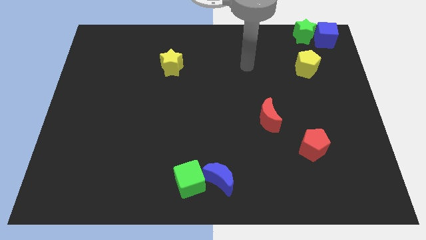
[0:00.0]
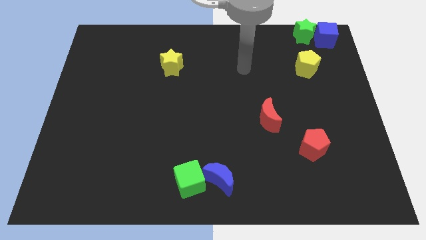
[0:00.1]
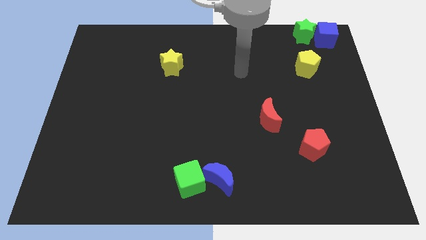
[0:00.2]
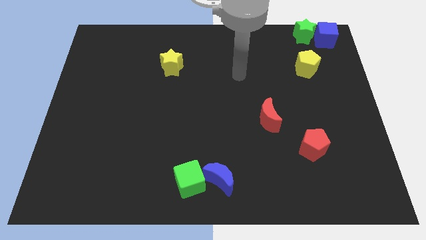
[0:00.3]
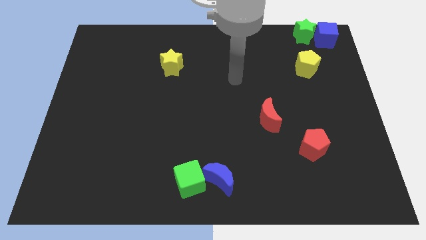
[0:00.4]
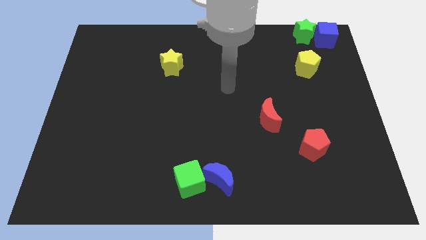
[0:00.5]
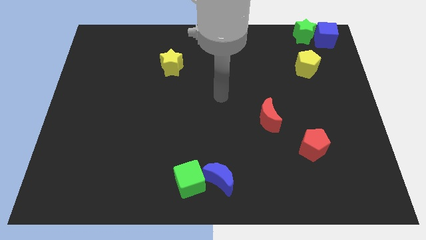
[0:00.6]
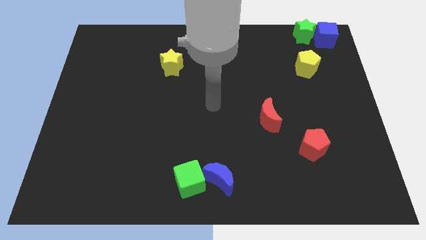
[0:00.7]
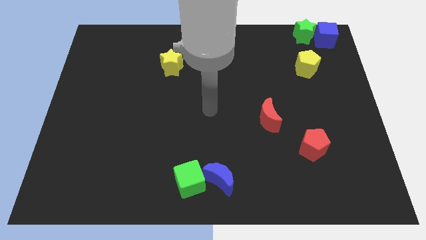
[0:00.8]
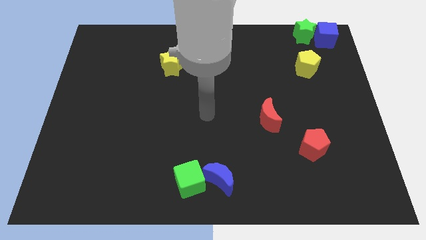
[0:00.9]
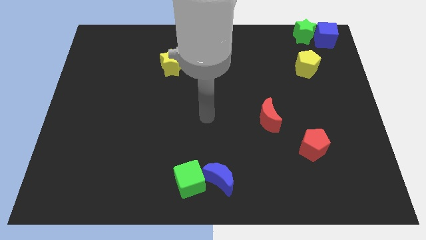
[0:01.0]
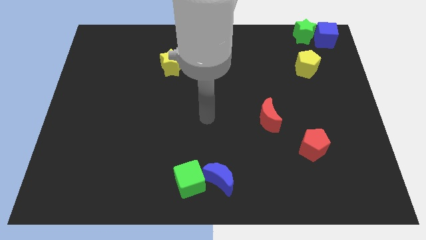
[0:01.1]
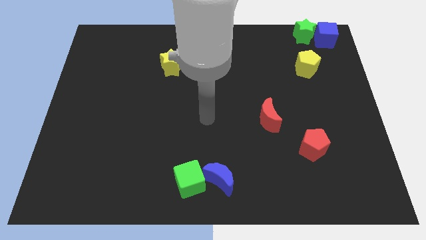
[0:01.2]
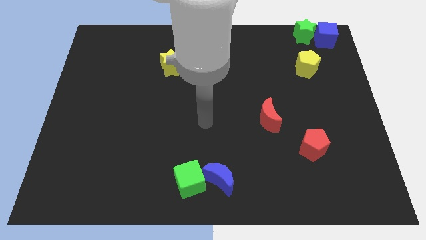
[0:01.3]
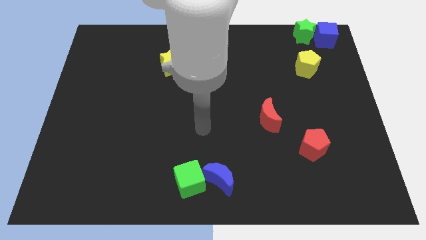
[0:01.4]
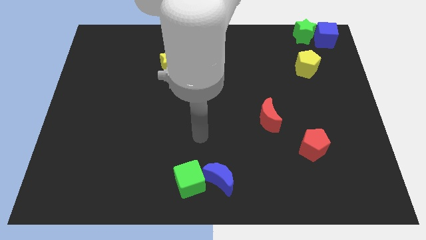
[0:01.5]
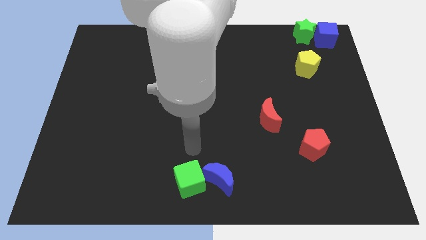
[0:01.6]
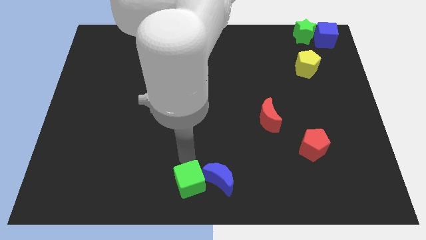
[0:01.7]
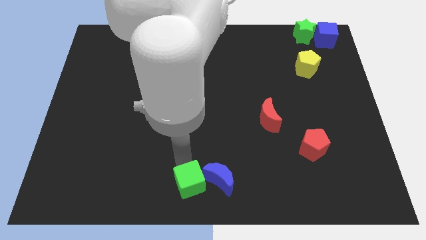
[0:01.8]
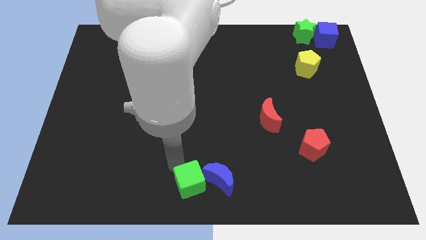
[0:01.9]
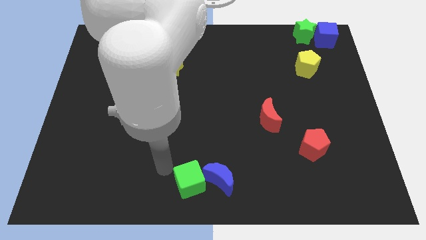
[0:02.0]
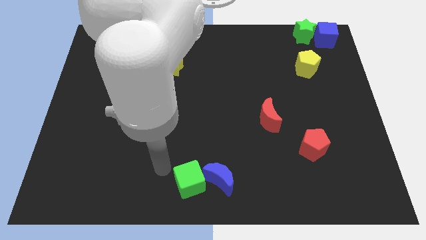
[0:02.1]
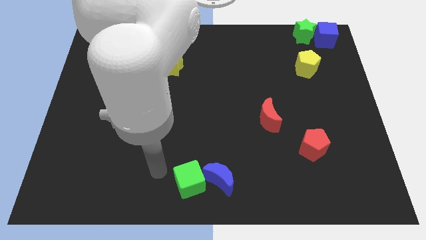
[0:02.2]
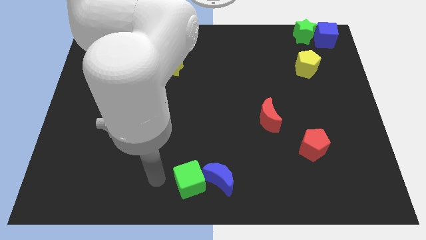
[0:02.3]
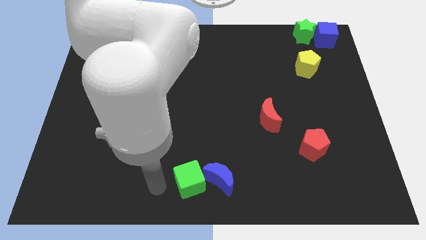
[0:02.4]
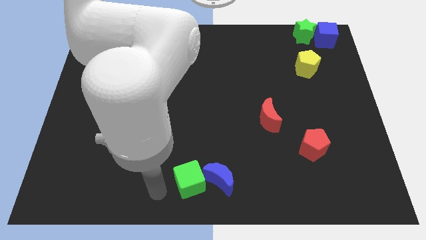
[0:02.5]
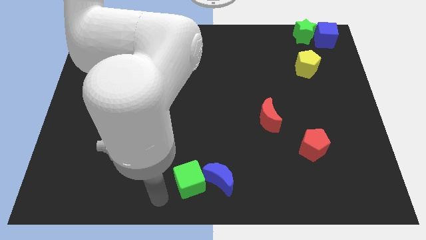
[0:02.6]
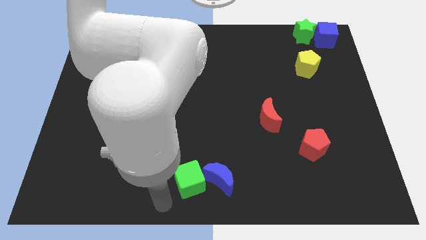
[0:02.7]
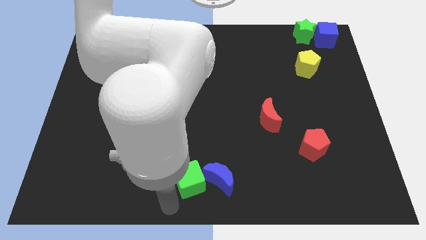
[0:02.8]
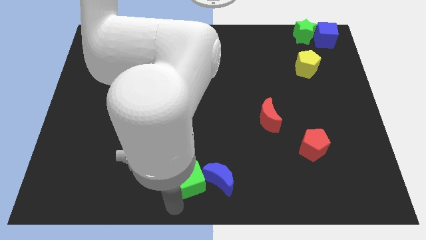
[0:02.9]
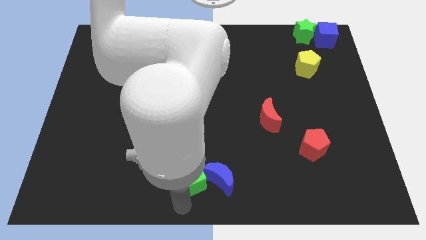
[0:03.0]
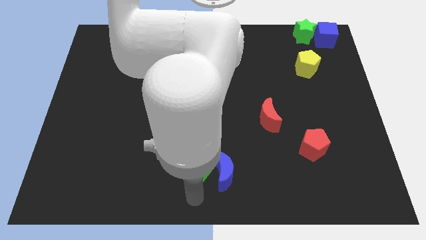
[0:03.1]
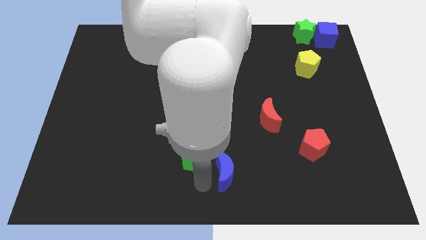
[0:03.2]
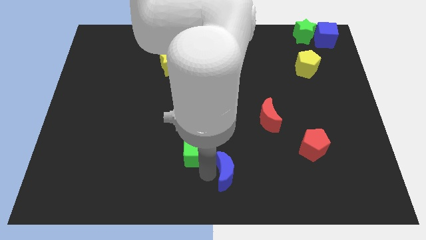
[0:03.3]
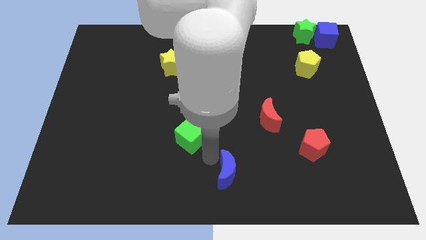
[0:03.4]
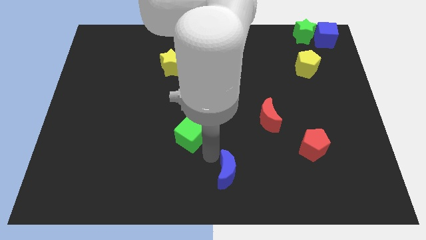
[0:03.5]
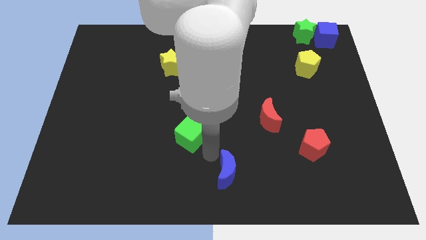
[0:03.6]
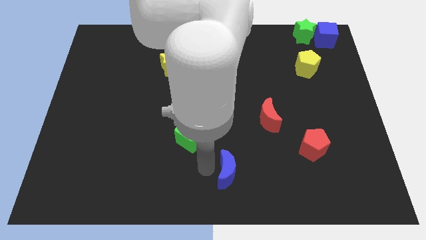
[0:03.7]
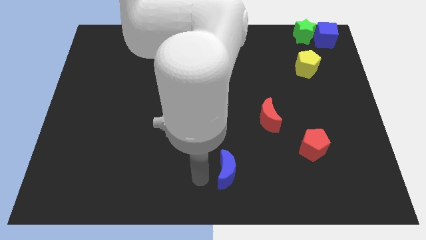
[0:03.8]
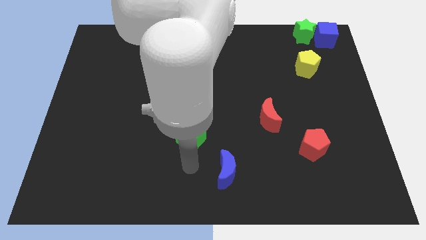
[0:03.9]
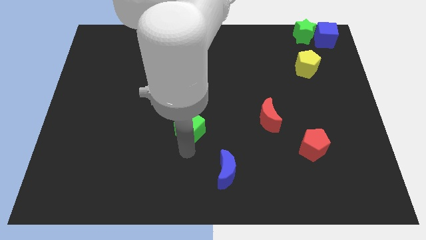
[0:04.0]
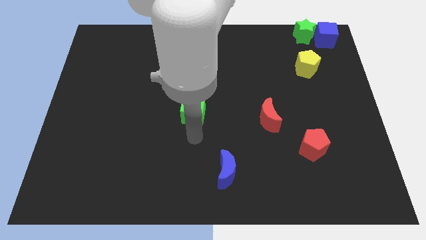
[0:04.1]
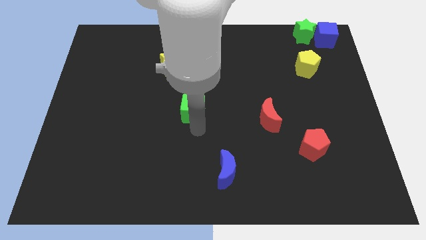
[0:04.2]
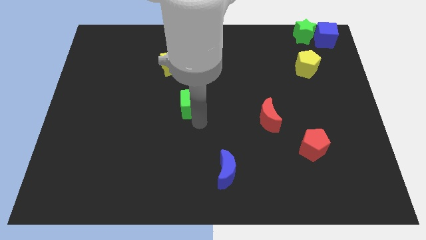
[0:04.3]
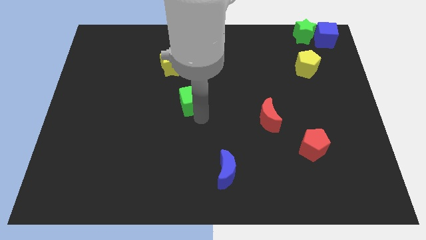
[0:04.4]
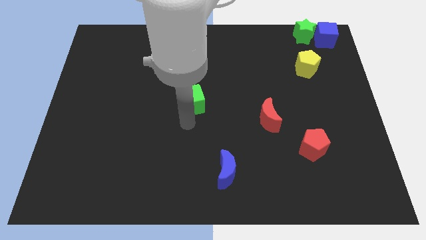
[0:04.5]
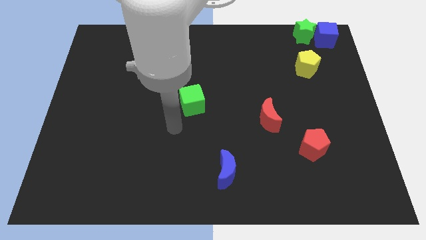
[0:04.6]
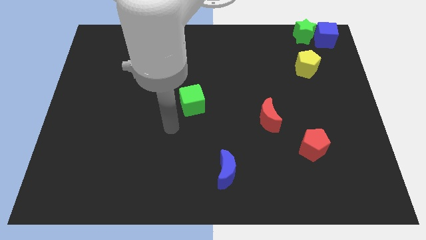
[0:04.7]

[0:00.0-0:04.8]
move the green cube to the middle of the board

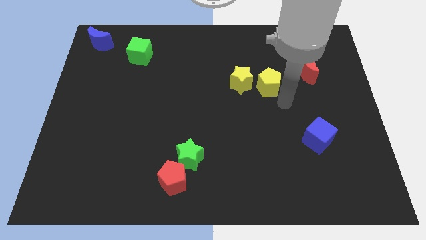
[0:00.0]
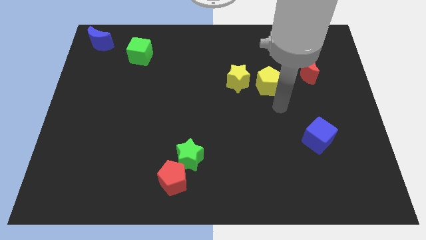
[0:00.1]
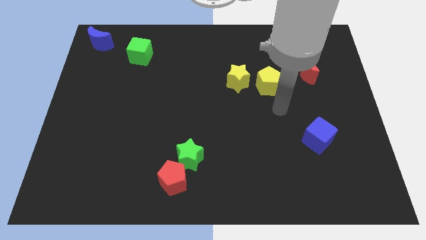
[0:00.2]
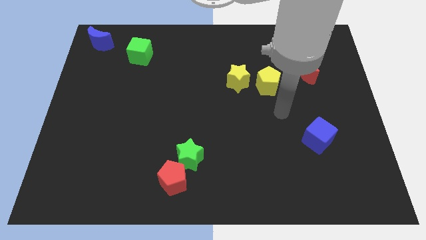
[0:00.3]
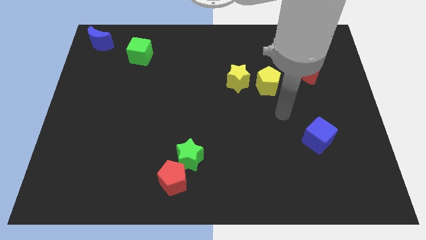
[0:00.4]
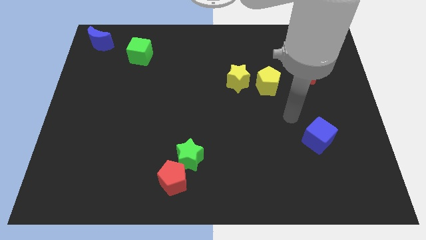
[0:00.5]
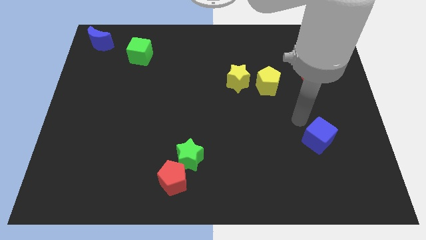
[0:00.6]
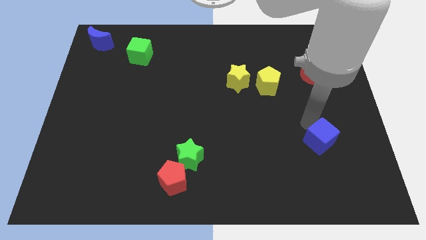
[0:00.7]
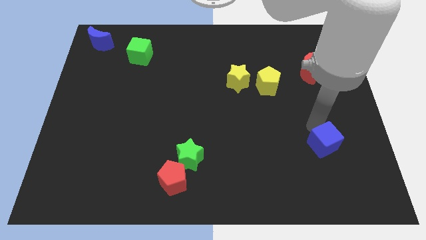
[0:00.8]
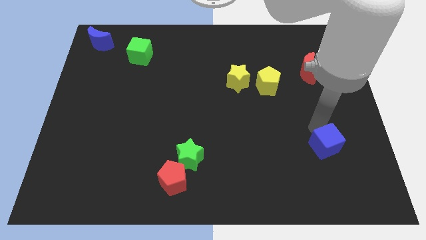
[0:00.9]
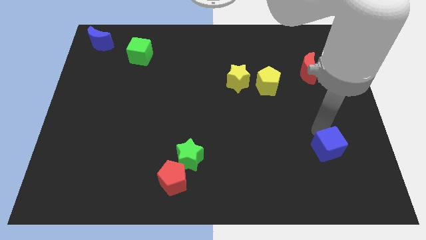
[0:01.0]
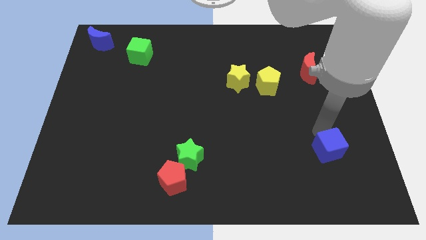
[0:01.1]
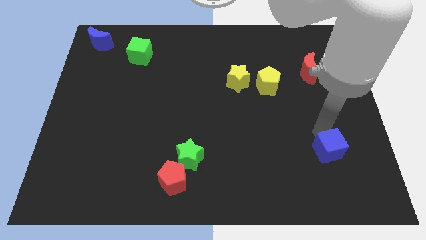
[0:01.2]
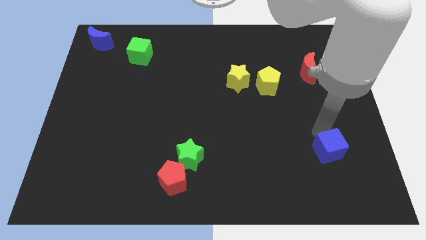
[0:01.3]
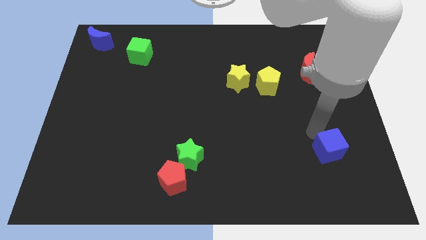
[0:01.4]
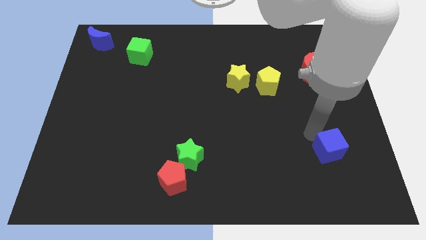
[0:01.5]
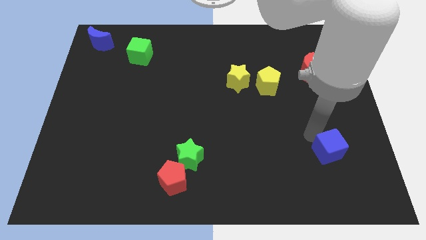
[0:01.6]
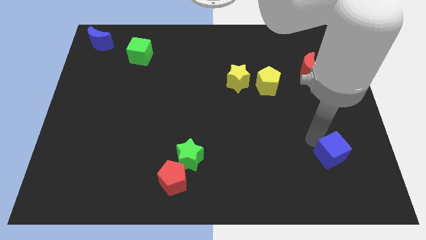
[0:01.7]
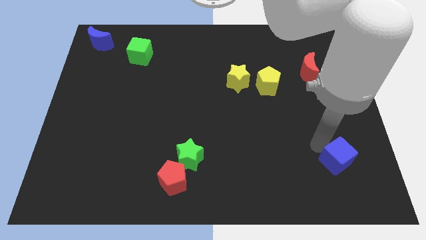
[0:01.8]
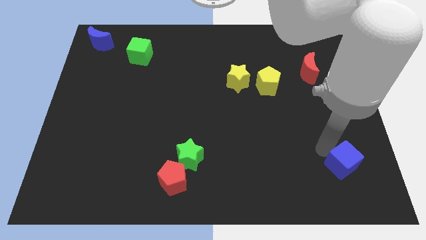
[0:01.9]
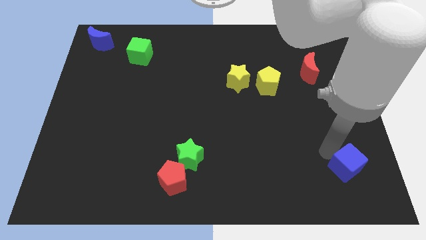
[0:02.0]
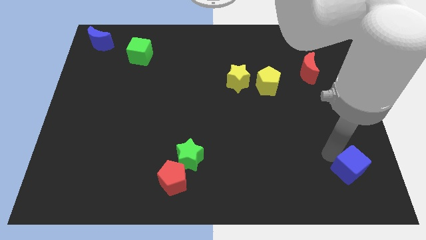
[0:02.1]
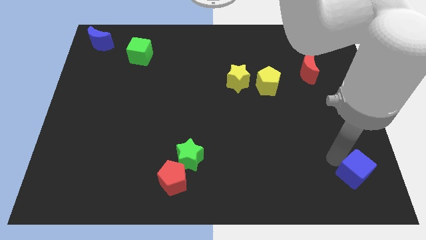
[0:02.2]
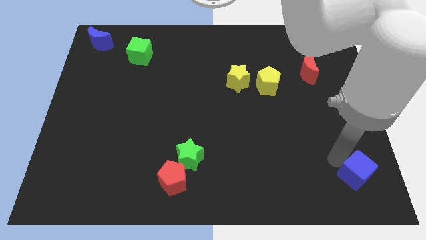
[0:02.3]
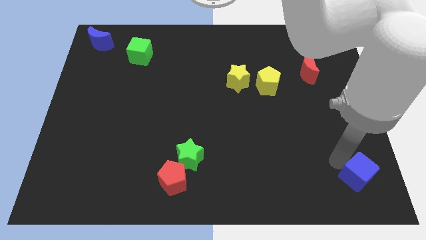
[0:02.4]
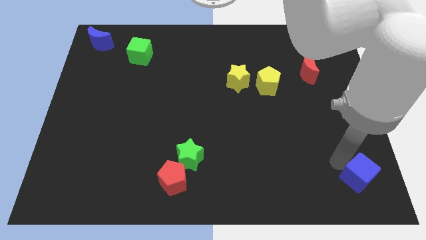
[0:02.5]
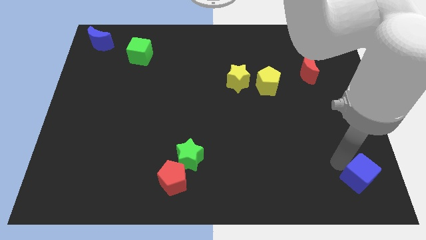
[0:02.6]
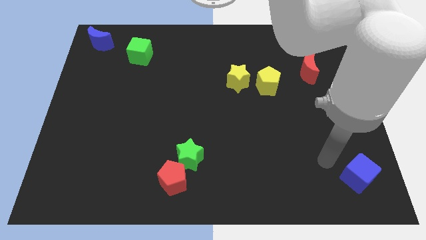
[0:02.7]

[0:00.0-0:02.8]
place blue cube parallel to red pentagon

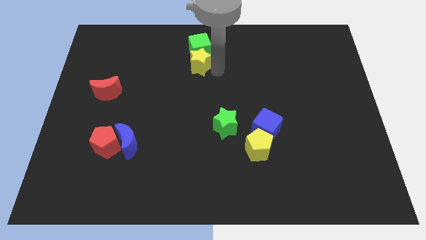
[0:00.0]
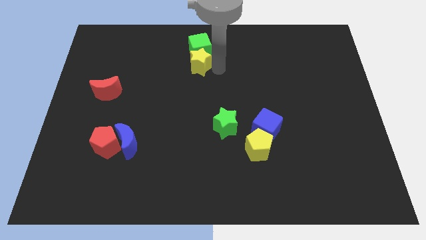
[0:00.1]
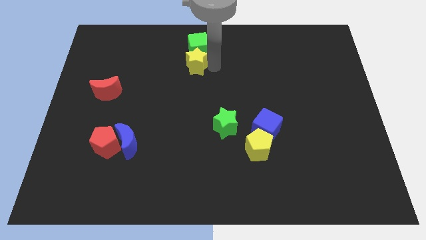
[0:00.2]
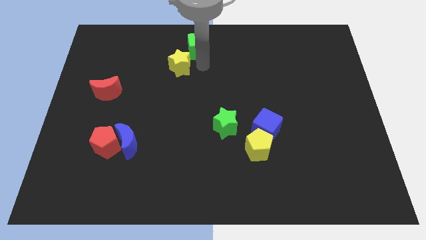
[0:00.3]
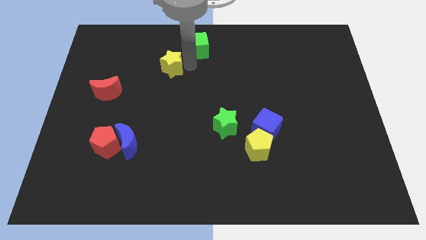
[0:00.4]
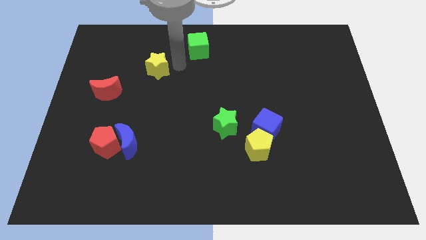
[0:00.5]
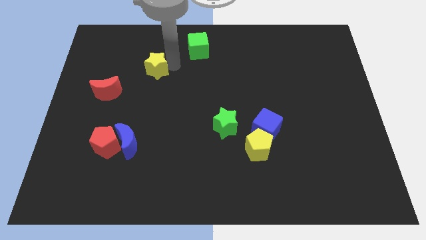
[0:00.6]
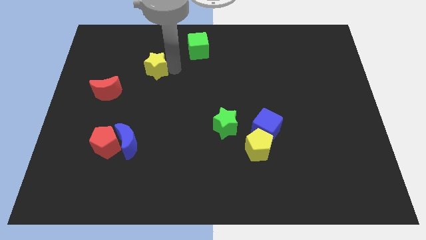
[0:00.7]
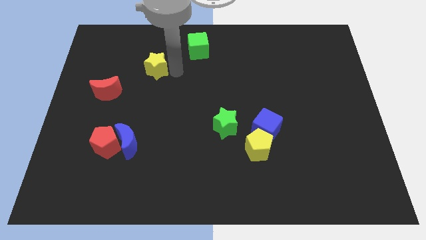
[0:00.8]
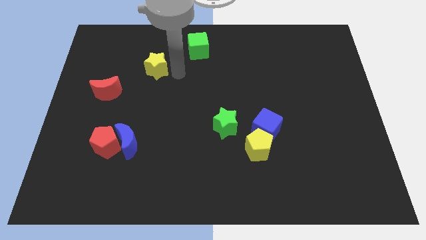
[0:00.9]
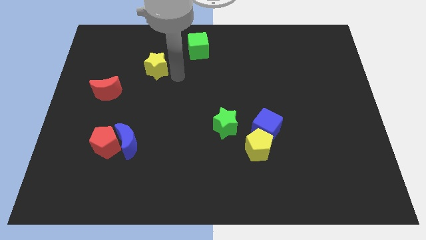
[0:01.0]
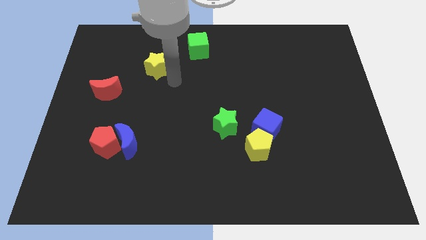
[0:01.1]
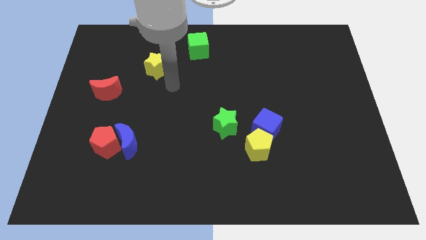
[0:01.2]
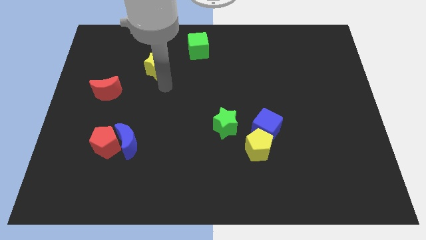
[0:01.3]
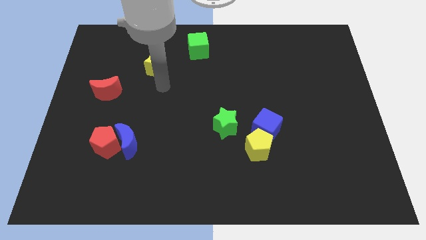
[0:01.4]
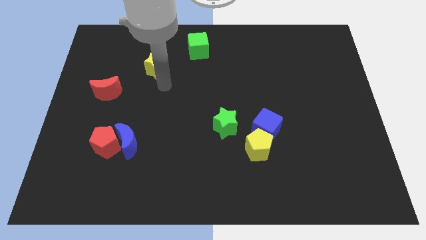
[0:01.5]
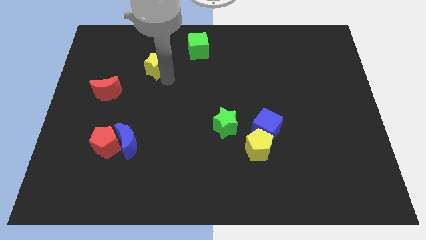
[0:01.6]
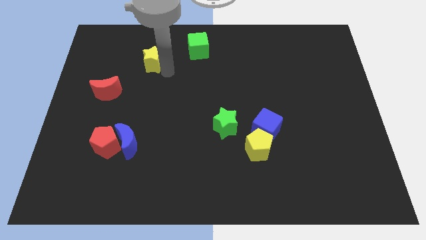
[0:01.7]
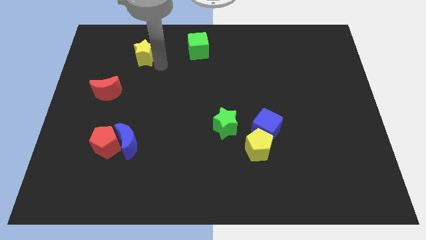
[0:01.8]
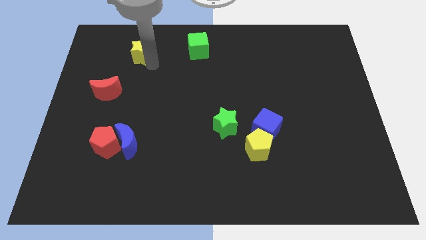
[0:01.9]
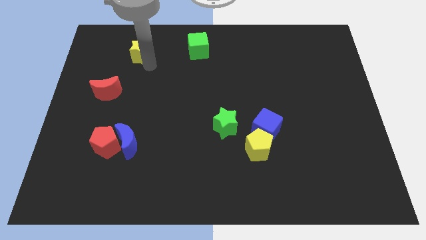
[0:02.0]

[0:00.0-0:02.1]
separate the yellow star and the green cube
